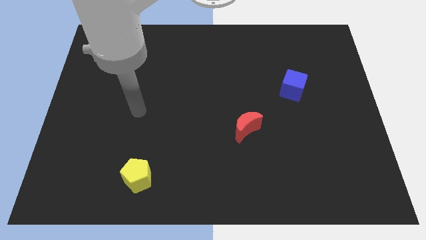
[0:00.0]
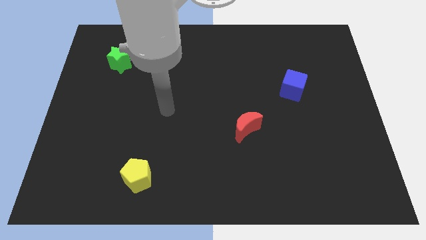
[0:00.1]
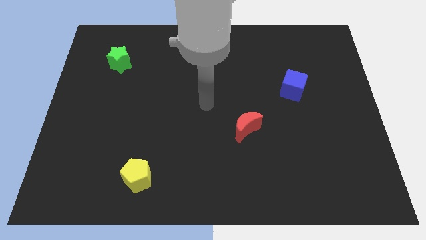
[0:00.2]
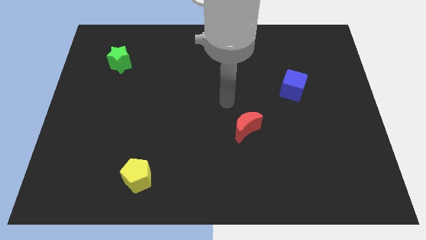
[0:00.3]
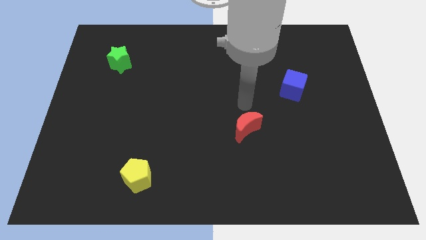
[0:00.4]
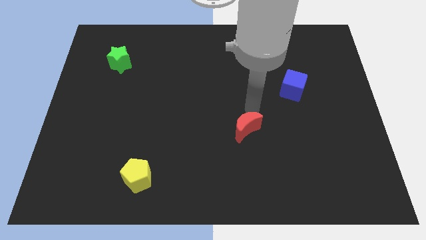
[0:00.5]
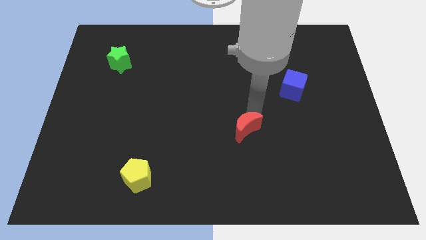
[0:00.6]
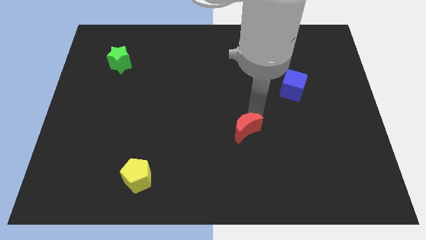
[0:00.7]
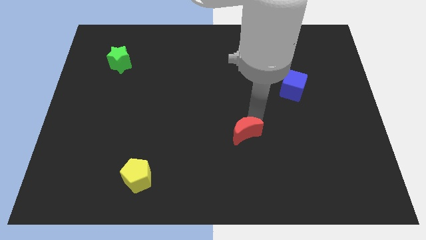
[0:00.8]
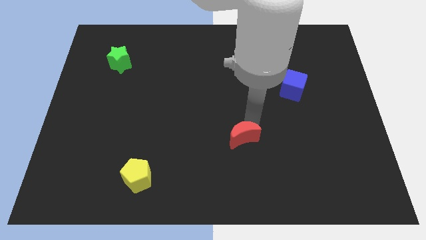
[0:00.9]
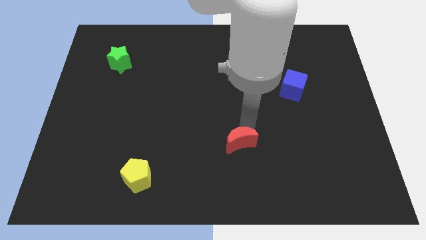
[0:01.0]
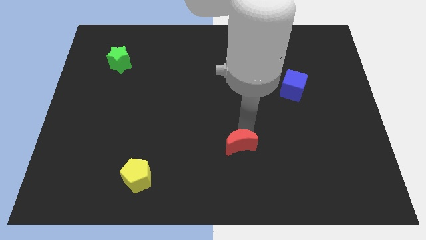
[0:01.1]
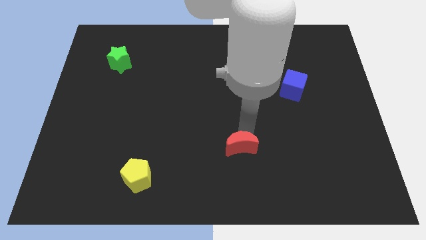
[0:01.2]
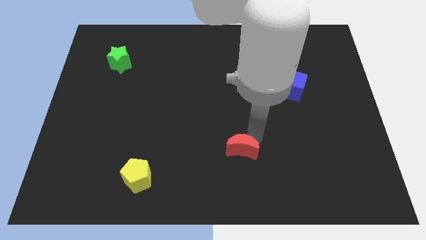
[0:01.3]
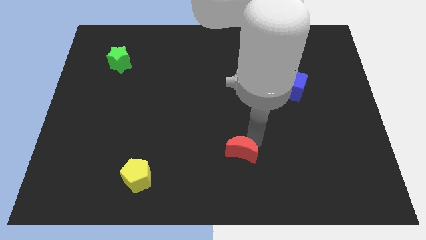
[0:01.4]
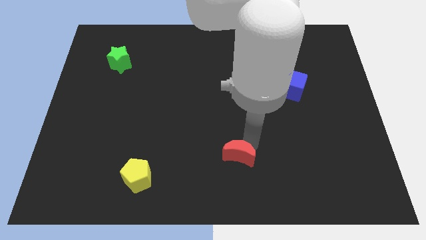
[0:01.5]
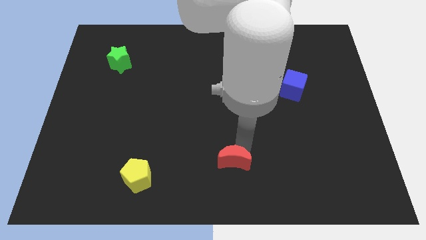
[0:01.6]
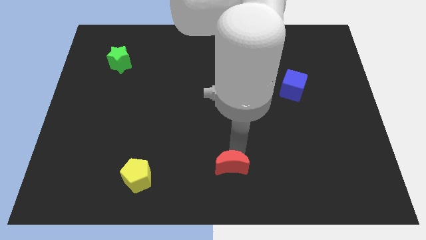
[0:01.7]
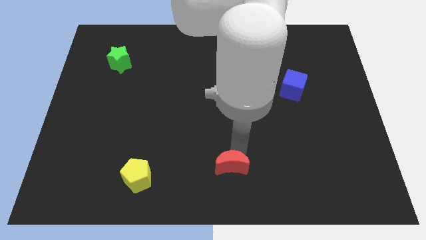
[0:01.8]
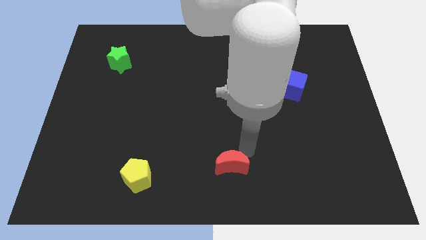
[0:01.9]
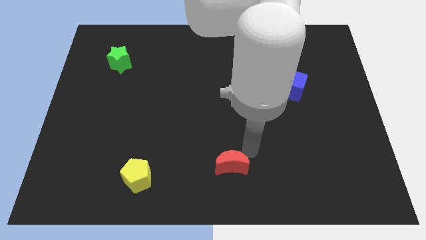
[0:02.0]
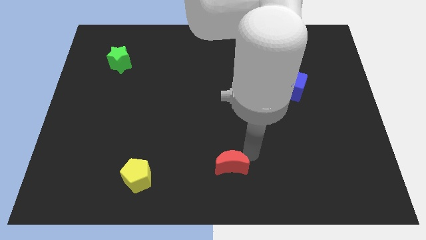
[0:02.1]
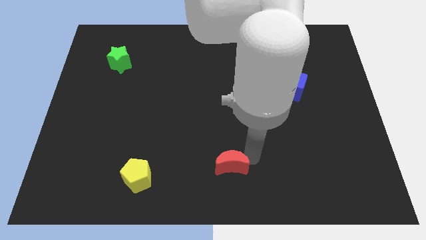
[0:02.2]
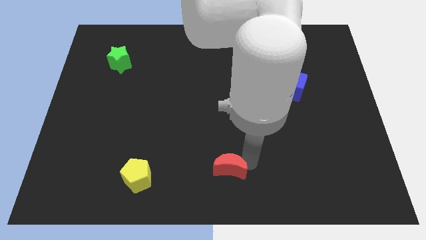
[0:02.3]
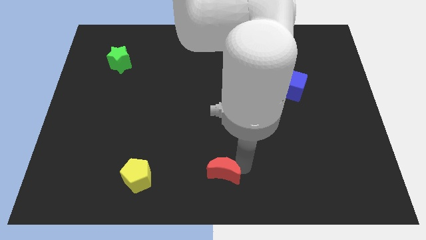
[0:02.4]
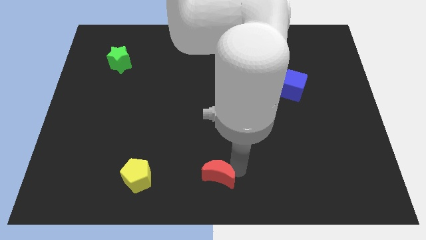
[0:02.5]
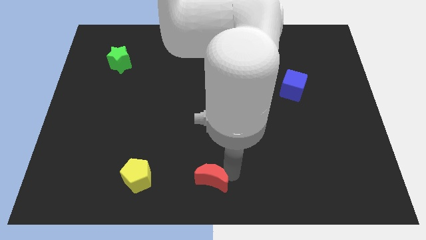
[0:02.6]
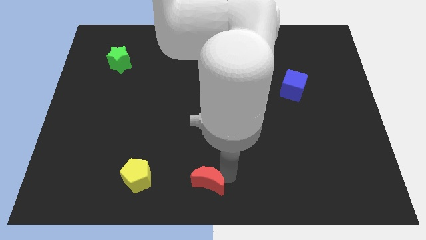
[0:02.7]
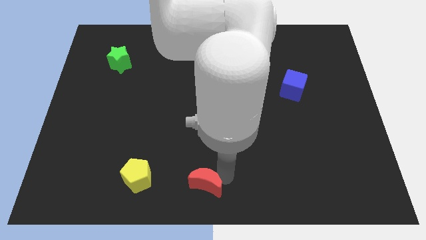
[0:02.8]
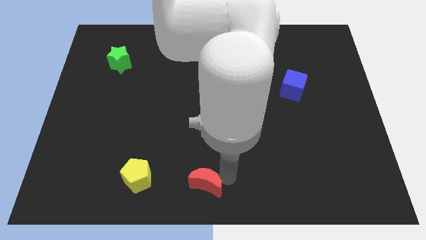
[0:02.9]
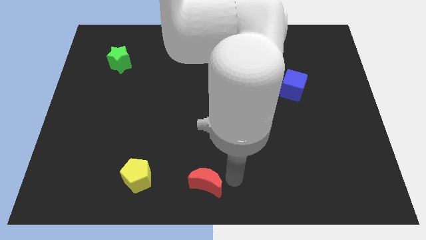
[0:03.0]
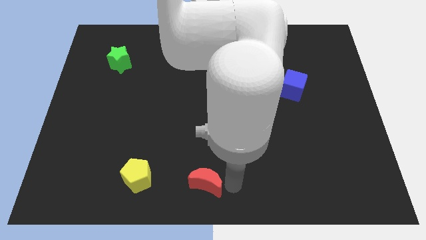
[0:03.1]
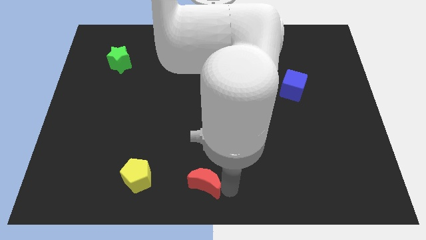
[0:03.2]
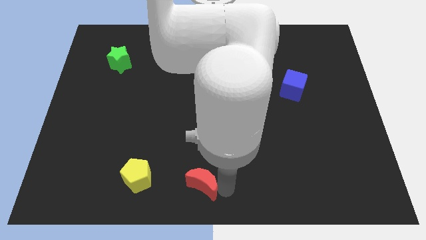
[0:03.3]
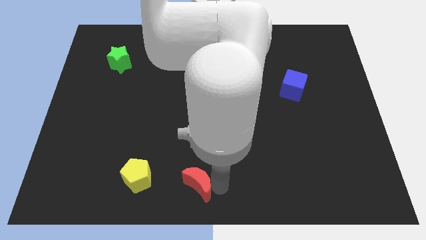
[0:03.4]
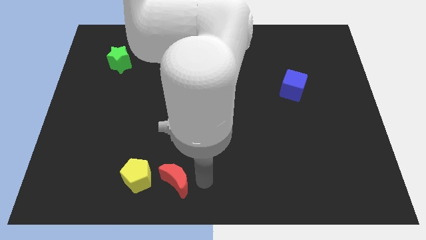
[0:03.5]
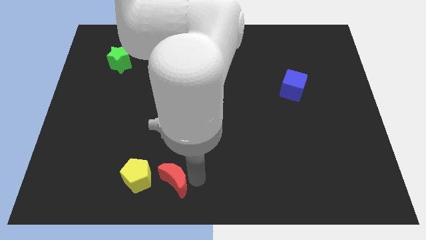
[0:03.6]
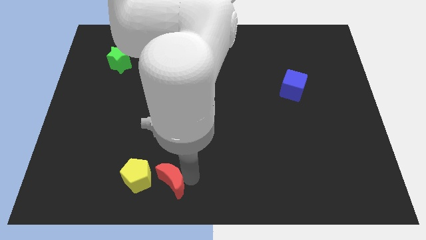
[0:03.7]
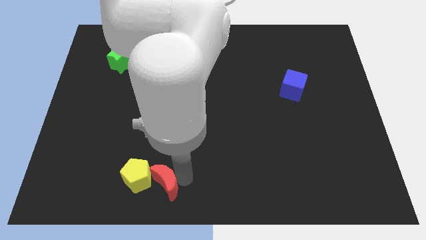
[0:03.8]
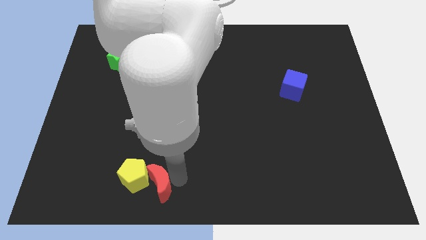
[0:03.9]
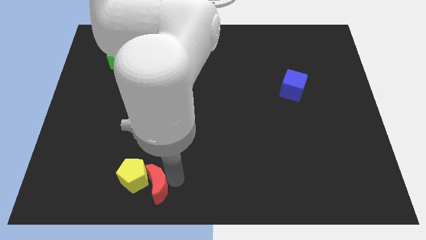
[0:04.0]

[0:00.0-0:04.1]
move the red moon next to the yellow block

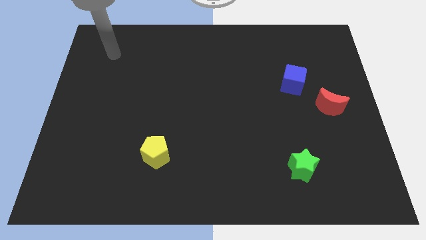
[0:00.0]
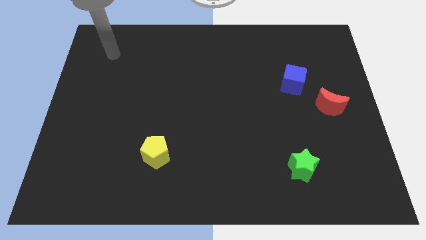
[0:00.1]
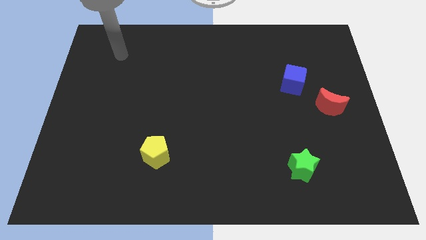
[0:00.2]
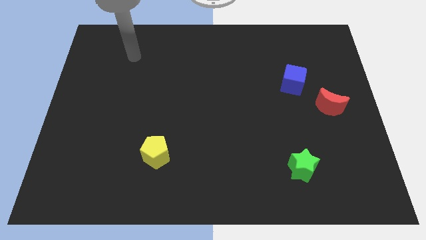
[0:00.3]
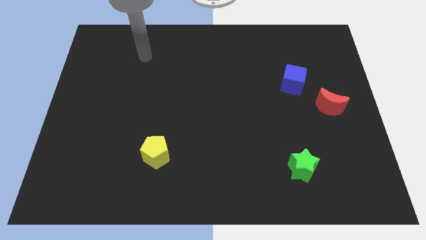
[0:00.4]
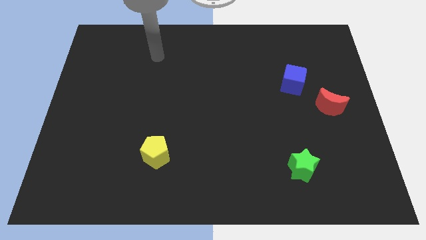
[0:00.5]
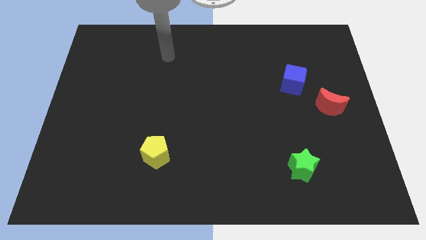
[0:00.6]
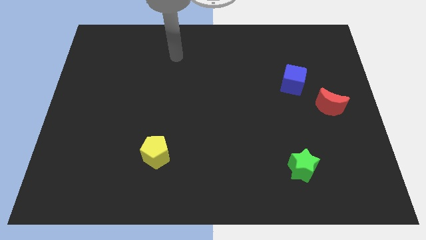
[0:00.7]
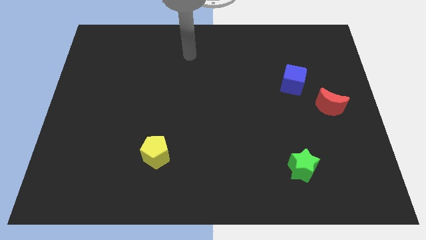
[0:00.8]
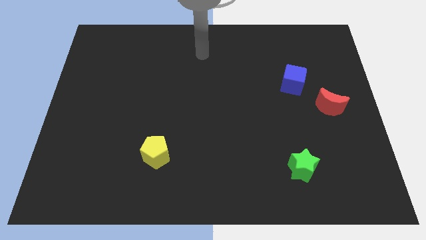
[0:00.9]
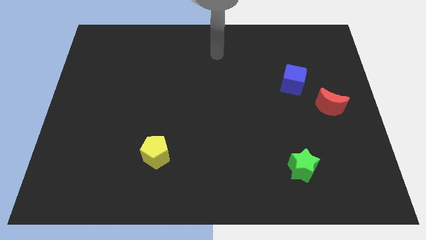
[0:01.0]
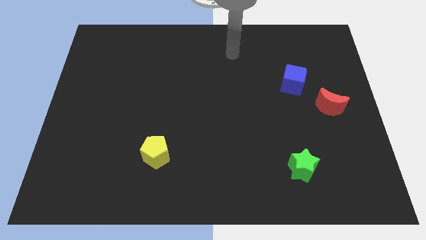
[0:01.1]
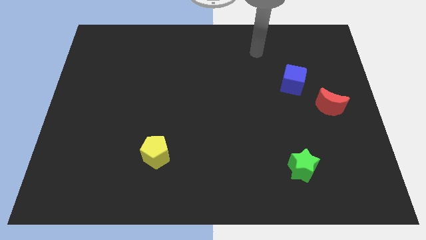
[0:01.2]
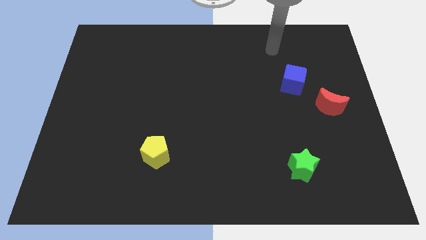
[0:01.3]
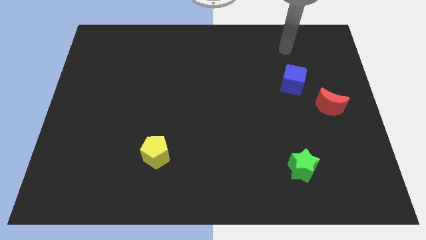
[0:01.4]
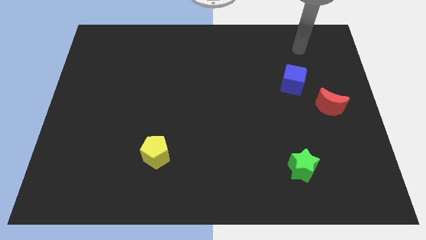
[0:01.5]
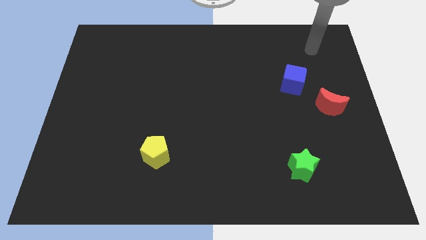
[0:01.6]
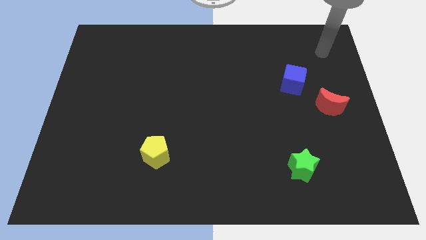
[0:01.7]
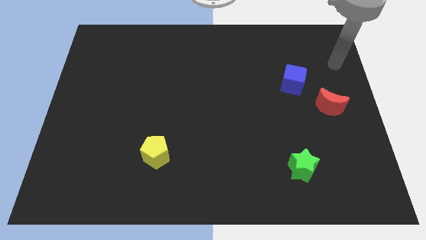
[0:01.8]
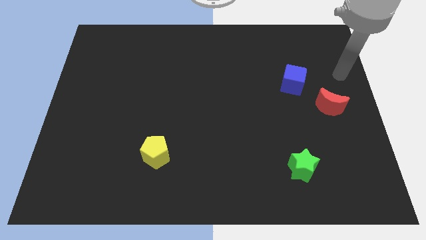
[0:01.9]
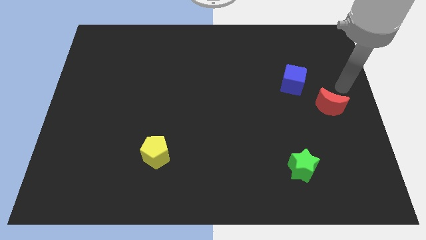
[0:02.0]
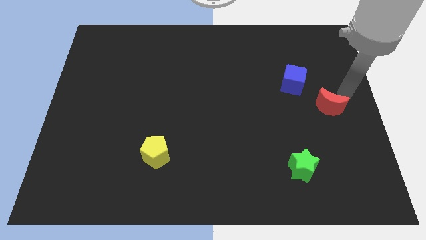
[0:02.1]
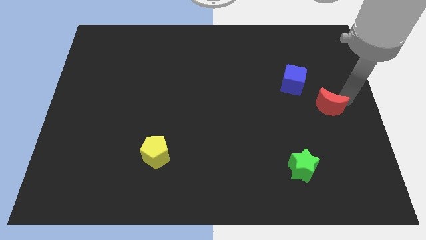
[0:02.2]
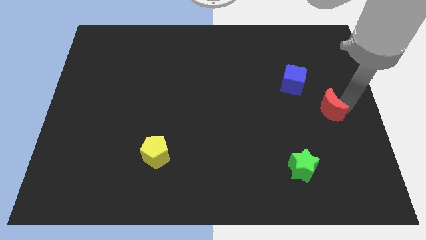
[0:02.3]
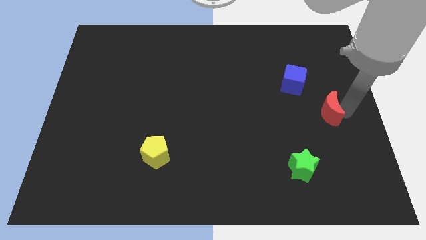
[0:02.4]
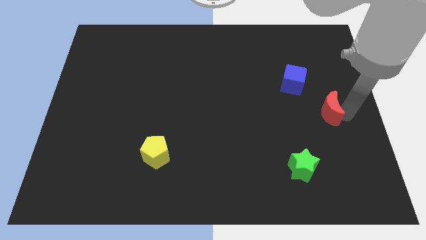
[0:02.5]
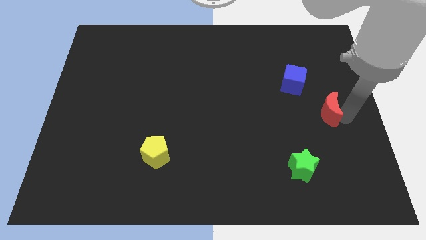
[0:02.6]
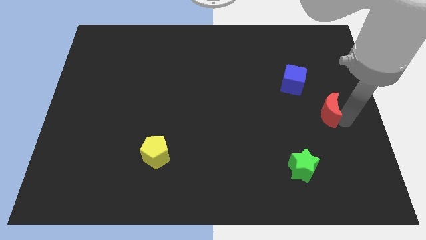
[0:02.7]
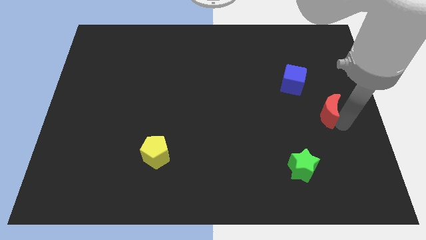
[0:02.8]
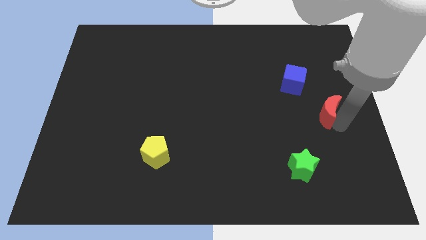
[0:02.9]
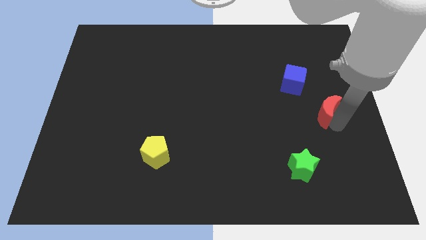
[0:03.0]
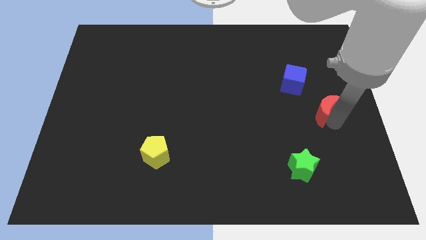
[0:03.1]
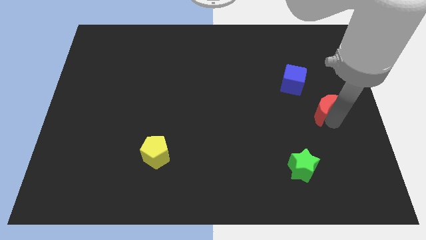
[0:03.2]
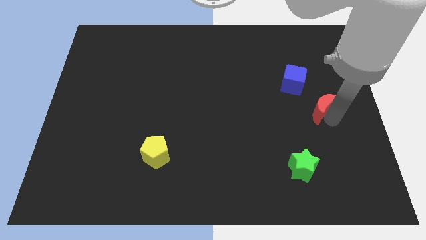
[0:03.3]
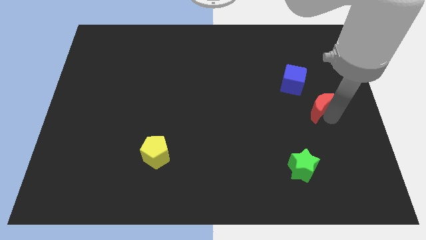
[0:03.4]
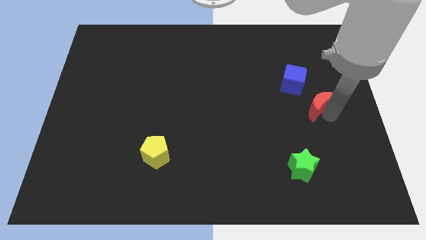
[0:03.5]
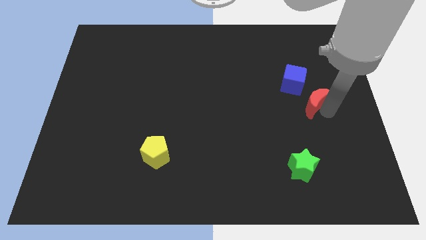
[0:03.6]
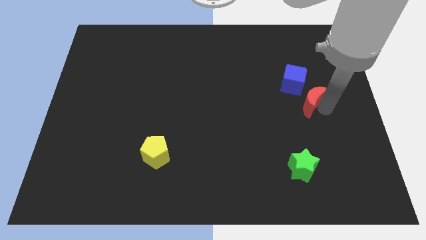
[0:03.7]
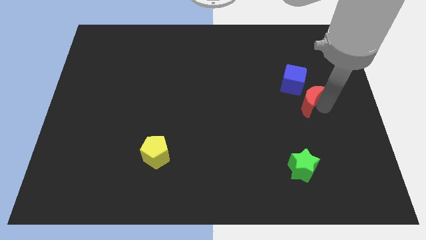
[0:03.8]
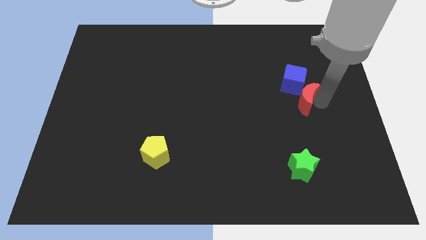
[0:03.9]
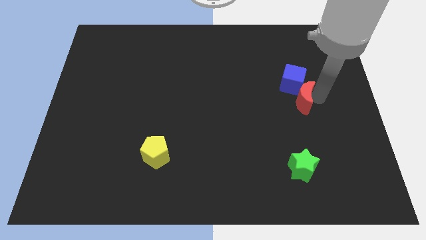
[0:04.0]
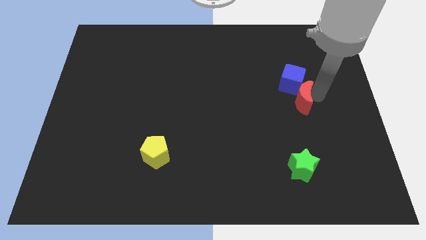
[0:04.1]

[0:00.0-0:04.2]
push the red block to the blue cube
